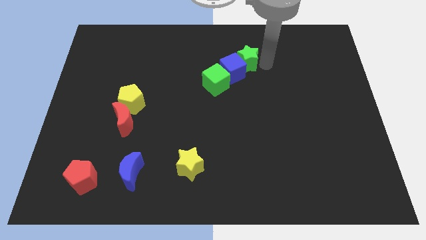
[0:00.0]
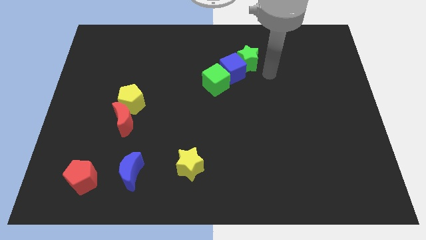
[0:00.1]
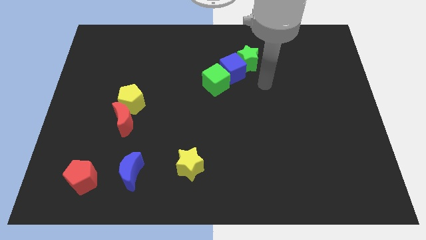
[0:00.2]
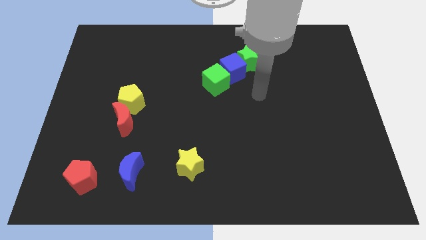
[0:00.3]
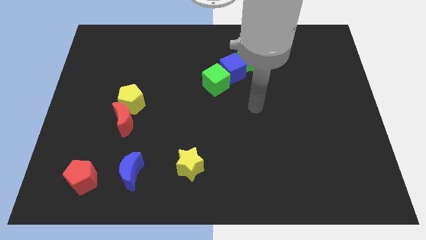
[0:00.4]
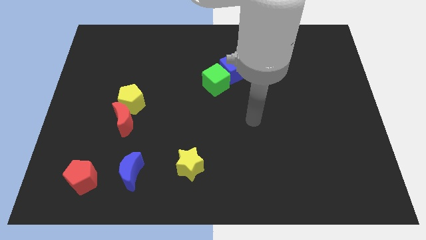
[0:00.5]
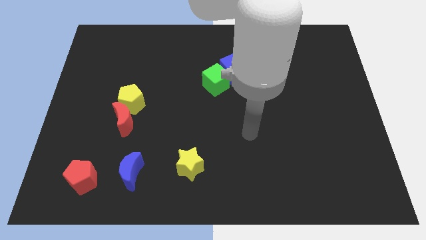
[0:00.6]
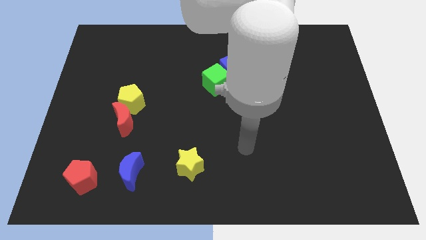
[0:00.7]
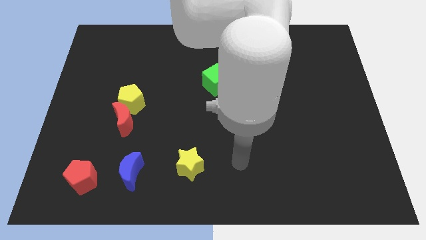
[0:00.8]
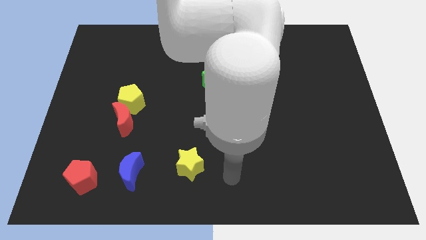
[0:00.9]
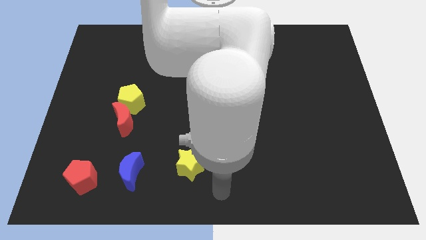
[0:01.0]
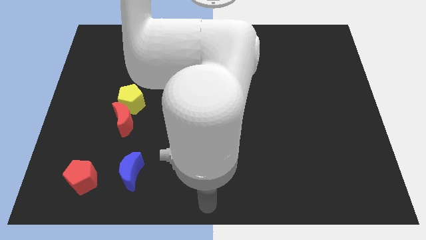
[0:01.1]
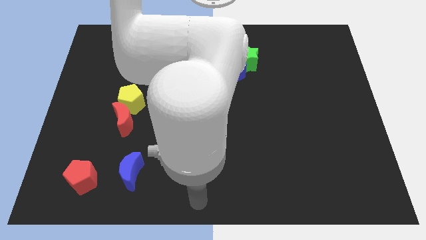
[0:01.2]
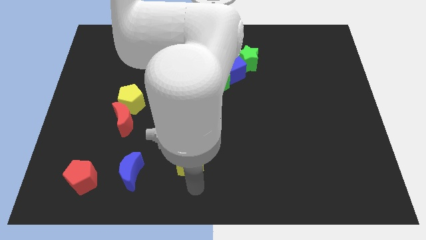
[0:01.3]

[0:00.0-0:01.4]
place your arm to the bottom of the yellow star

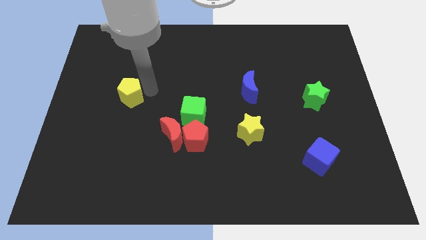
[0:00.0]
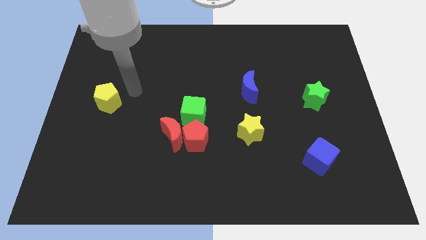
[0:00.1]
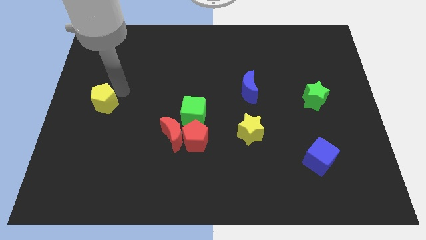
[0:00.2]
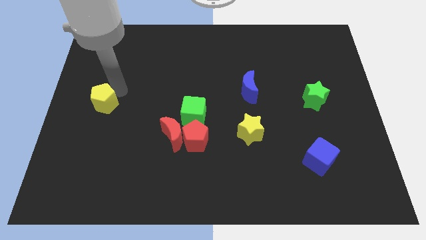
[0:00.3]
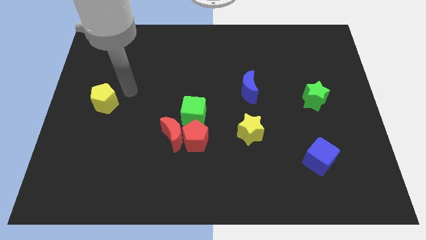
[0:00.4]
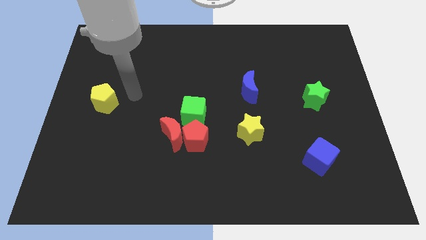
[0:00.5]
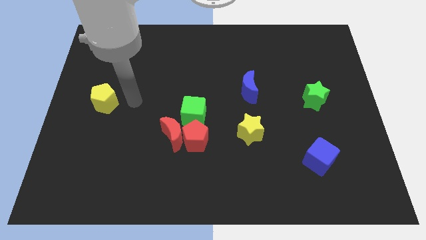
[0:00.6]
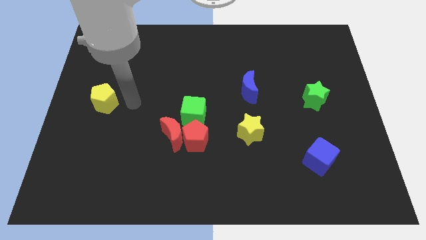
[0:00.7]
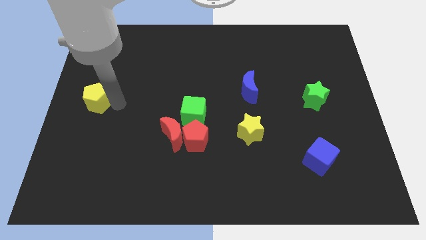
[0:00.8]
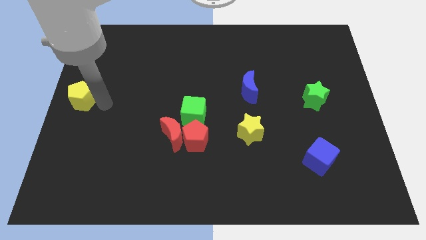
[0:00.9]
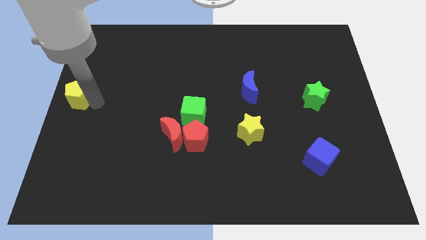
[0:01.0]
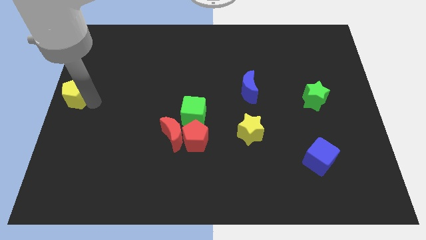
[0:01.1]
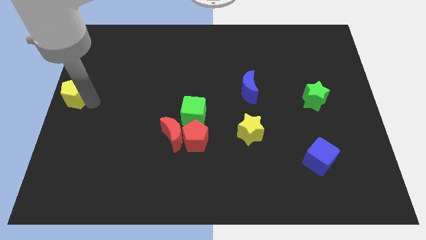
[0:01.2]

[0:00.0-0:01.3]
push the yellow pentagon to the center left of the board

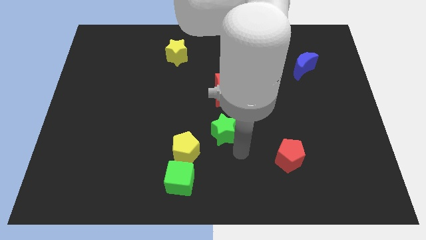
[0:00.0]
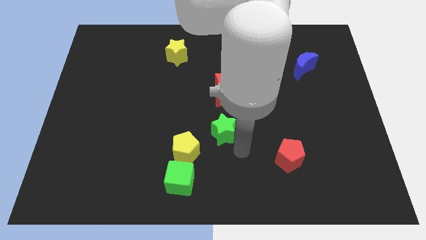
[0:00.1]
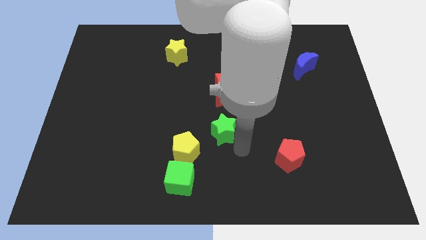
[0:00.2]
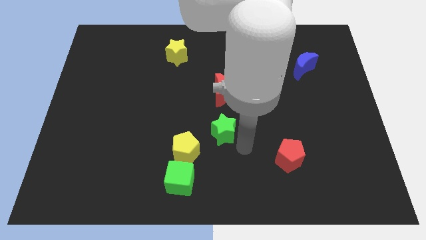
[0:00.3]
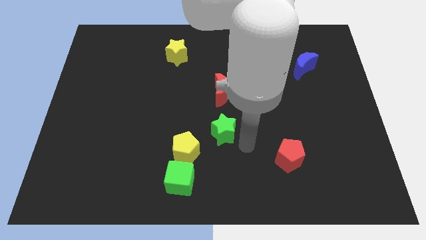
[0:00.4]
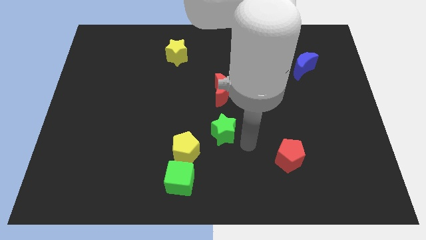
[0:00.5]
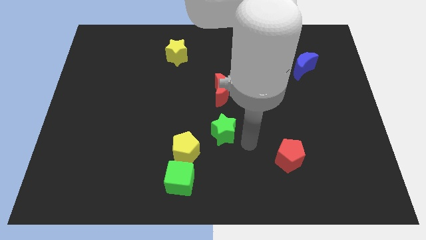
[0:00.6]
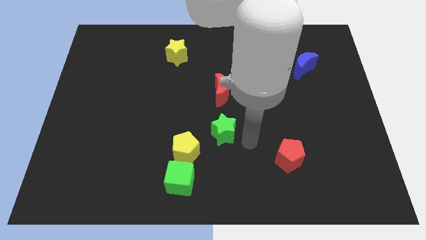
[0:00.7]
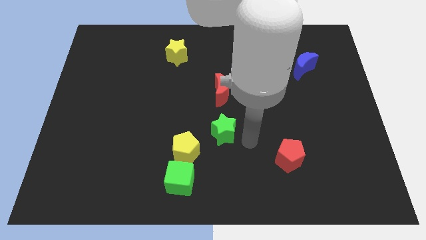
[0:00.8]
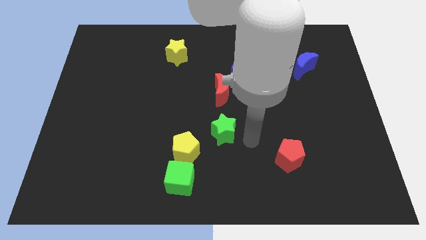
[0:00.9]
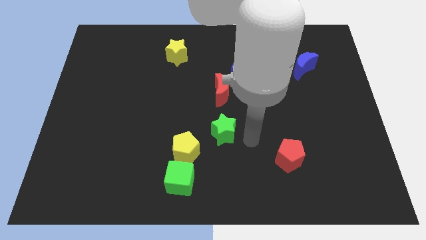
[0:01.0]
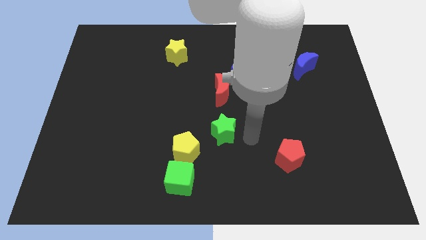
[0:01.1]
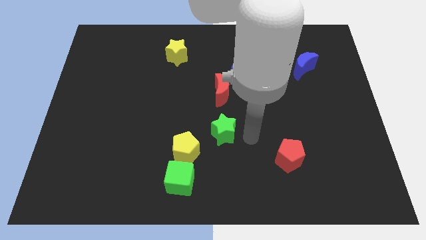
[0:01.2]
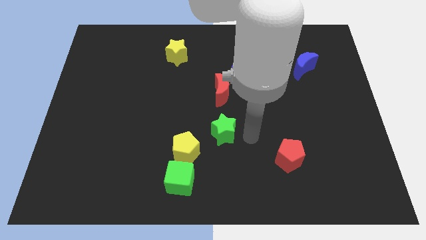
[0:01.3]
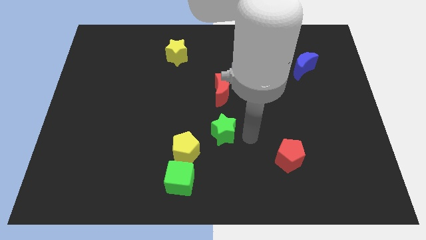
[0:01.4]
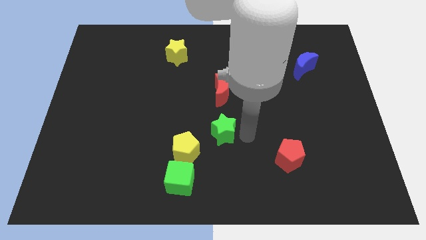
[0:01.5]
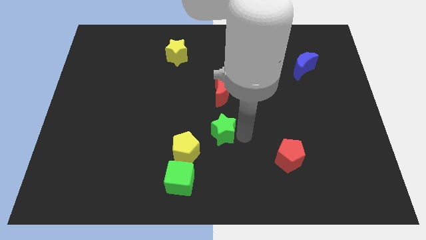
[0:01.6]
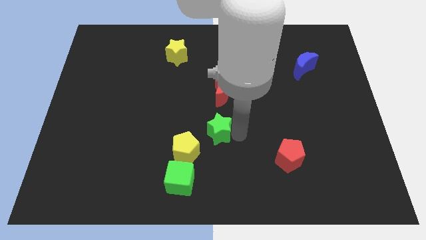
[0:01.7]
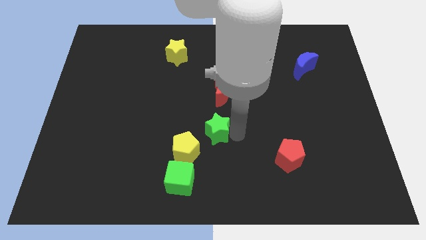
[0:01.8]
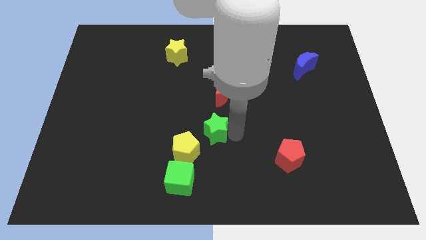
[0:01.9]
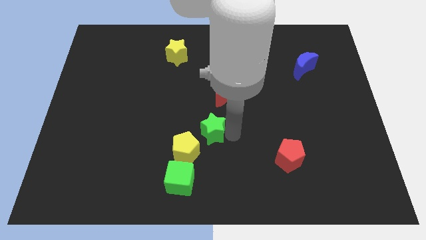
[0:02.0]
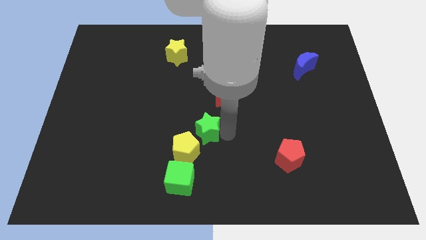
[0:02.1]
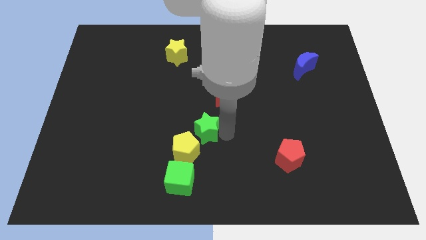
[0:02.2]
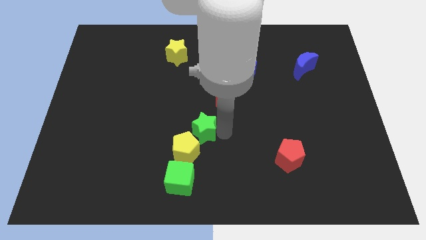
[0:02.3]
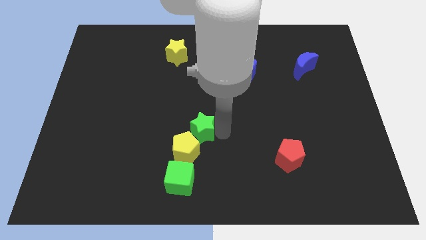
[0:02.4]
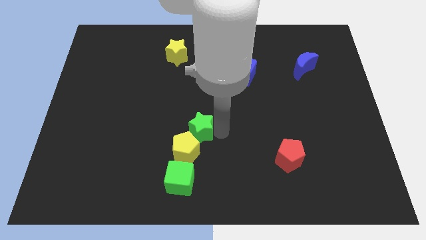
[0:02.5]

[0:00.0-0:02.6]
place the green star at the top right side of yellow pentagon

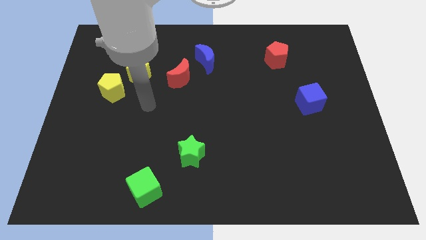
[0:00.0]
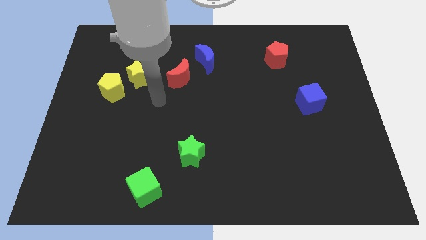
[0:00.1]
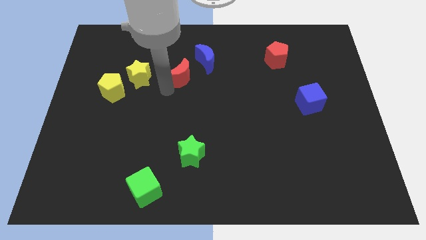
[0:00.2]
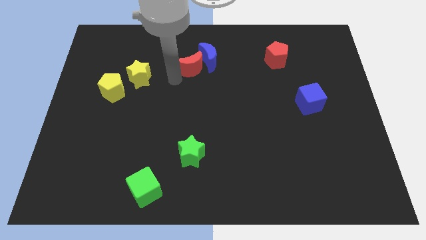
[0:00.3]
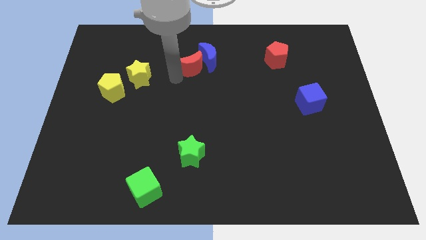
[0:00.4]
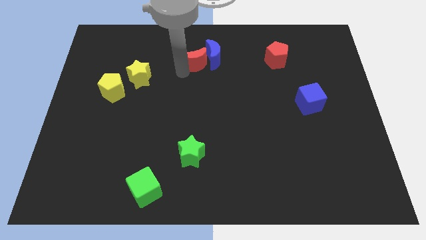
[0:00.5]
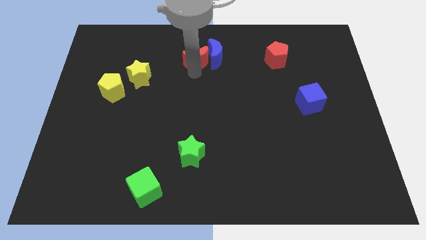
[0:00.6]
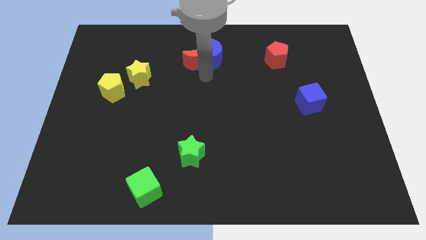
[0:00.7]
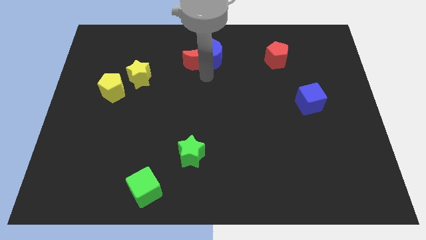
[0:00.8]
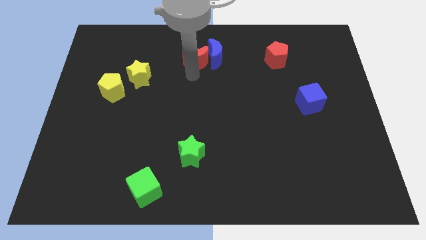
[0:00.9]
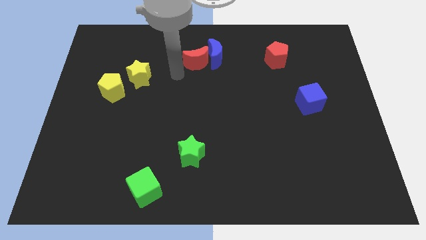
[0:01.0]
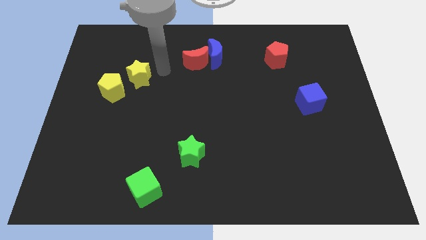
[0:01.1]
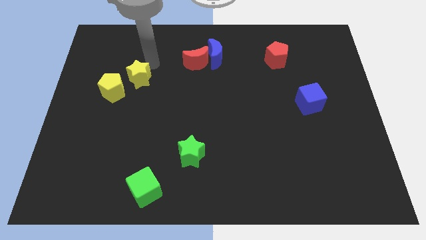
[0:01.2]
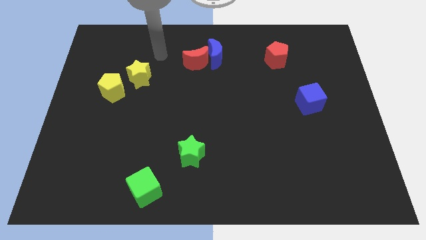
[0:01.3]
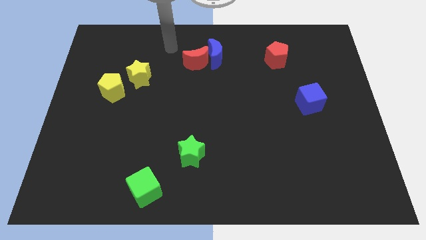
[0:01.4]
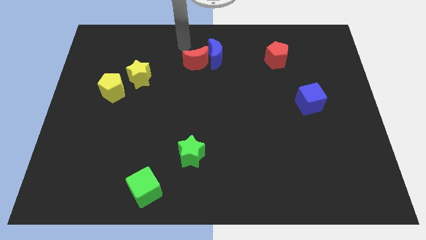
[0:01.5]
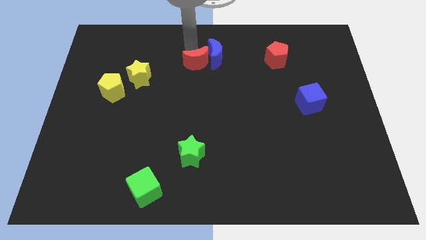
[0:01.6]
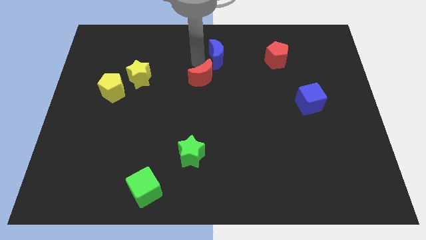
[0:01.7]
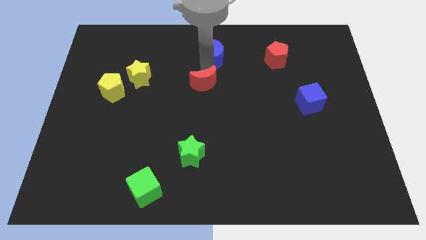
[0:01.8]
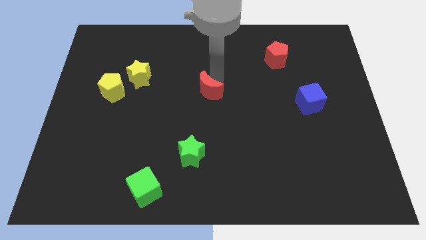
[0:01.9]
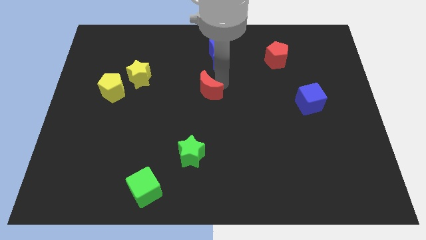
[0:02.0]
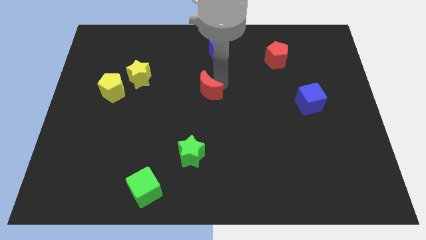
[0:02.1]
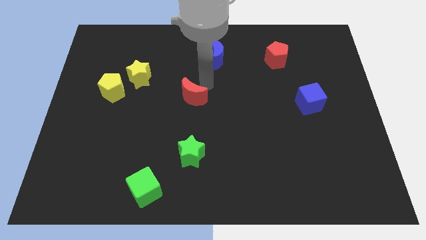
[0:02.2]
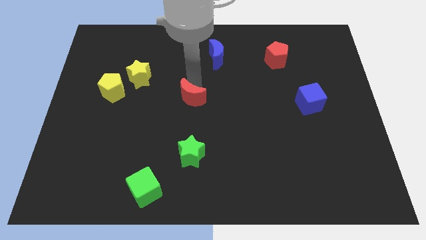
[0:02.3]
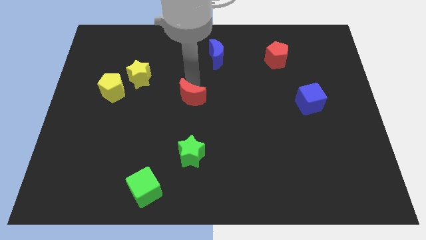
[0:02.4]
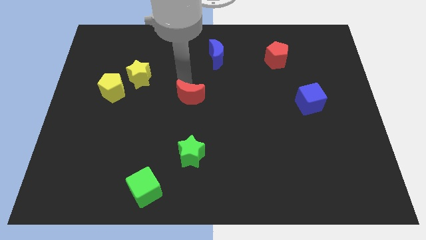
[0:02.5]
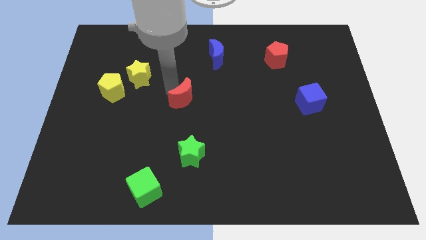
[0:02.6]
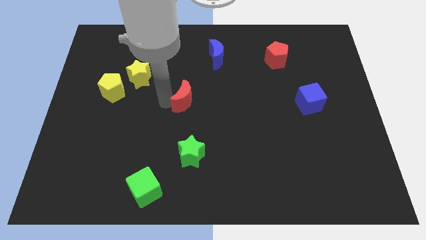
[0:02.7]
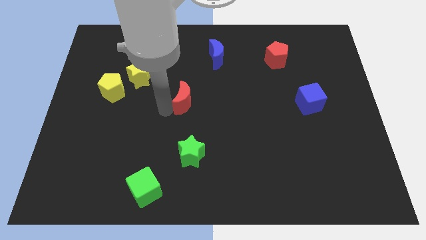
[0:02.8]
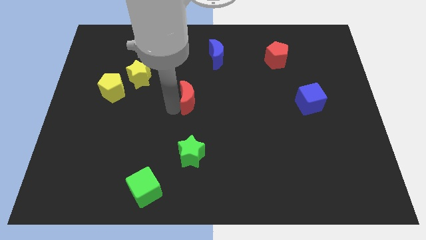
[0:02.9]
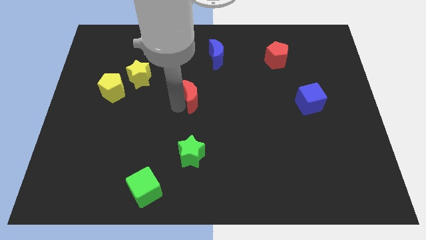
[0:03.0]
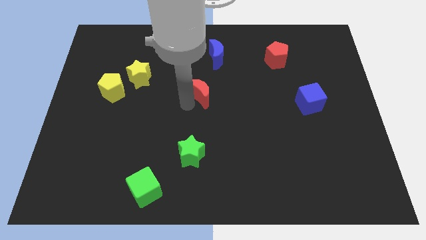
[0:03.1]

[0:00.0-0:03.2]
move the red moon vertically above the green star

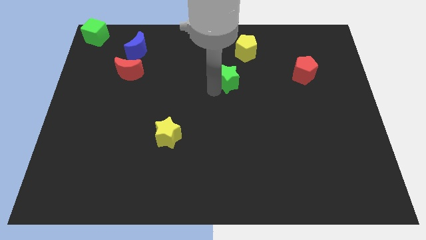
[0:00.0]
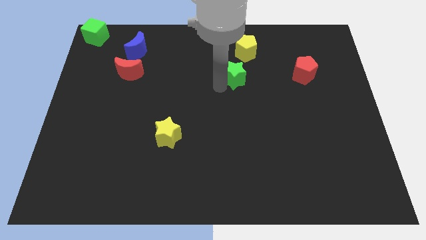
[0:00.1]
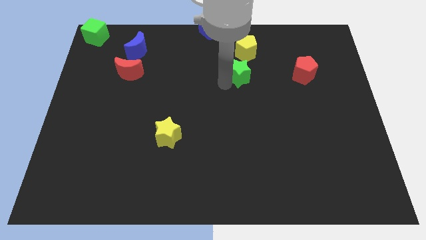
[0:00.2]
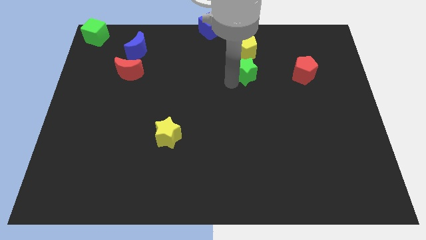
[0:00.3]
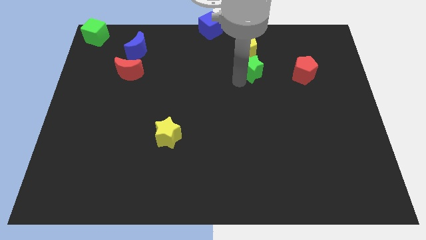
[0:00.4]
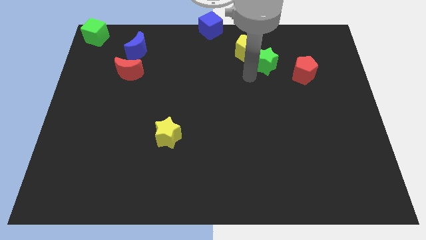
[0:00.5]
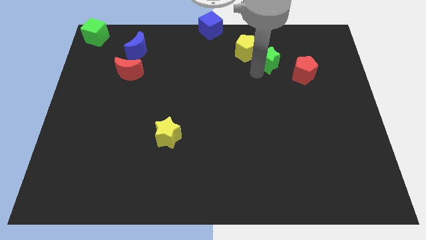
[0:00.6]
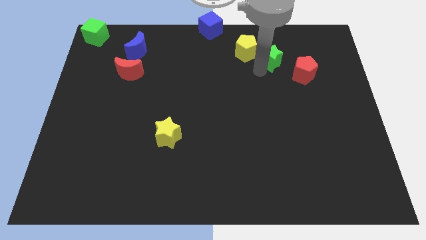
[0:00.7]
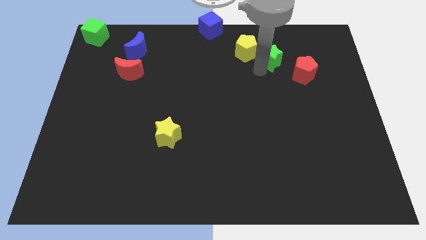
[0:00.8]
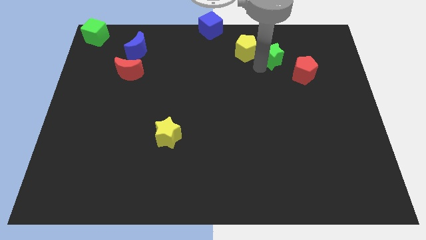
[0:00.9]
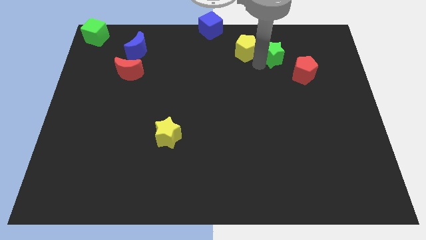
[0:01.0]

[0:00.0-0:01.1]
place green star to the right of yellow pentagon
